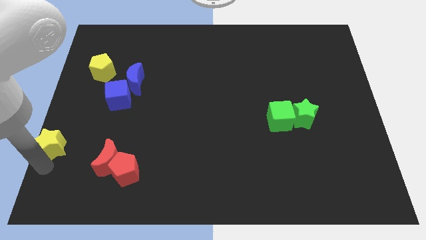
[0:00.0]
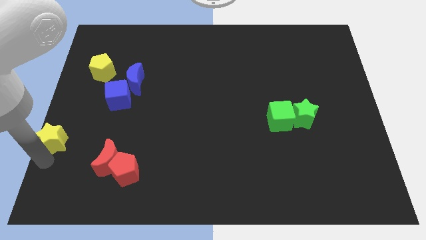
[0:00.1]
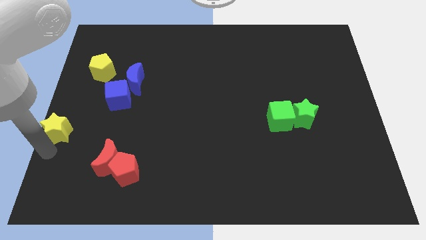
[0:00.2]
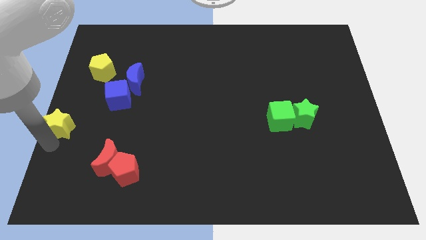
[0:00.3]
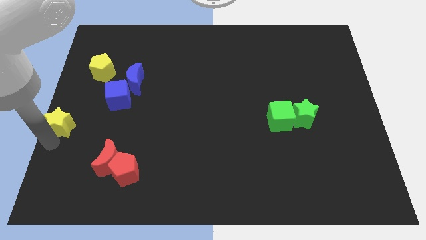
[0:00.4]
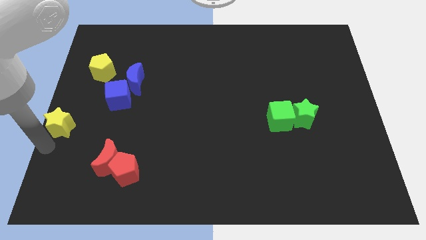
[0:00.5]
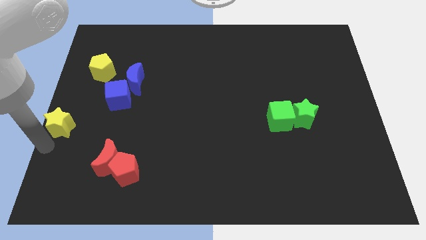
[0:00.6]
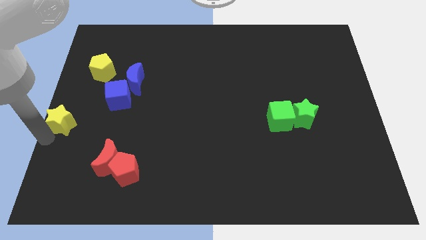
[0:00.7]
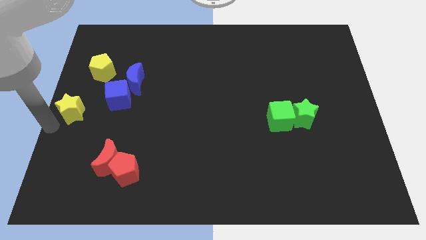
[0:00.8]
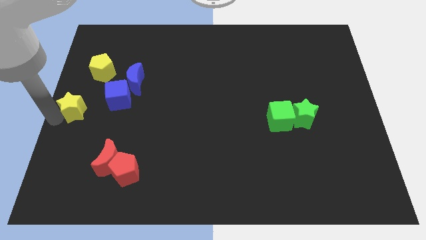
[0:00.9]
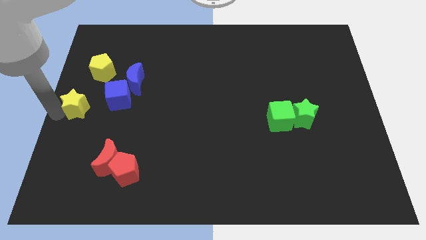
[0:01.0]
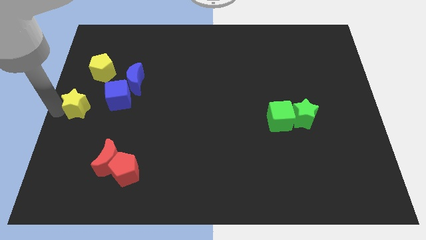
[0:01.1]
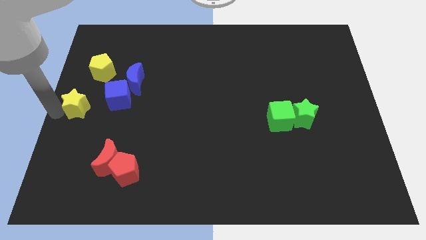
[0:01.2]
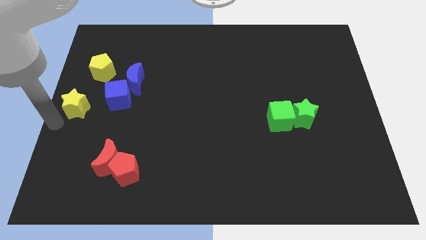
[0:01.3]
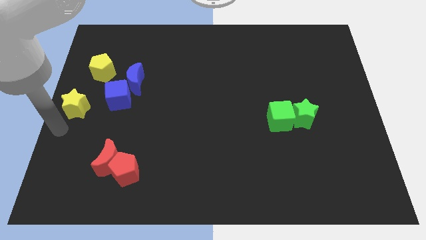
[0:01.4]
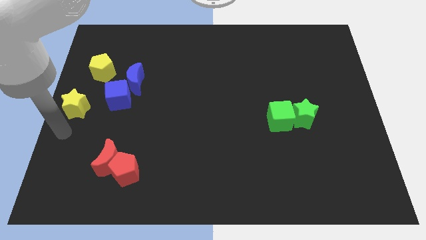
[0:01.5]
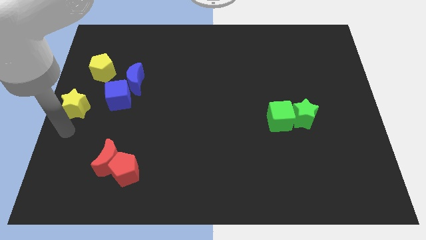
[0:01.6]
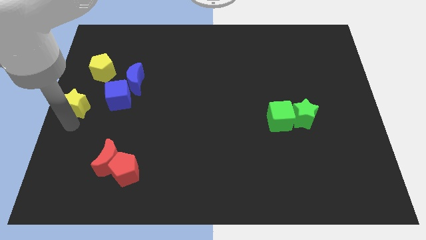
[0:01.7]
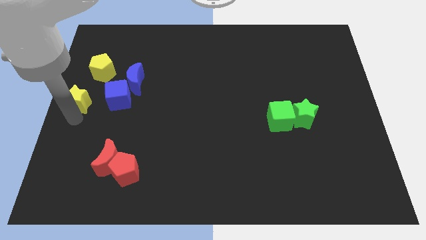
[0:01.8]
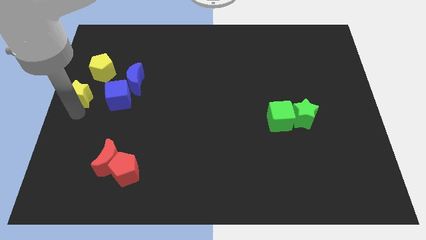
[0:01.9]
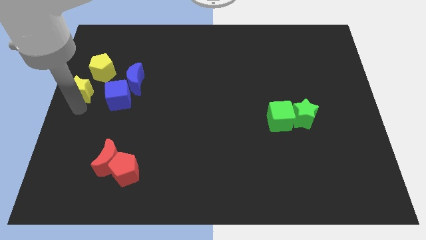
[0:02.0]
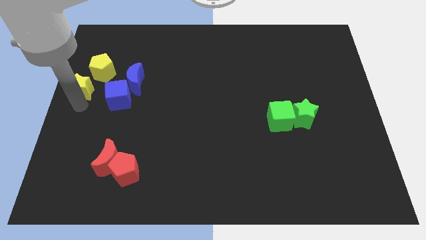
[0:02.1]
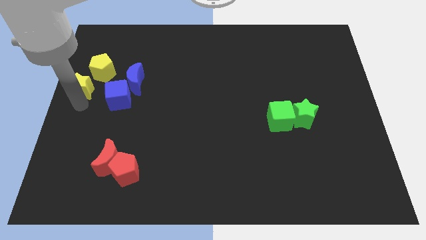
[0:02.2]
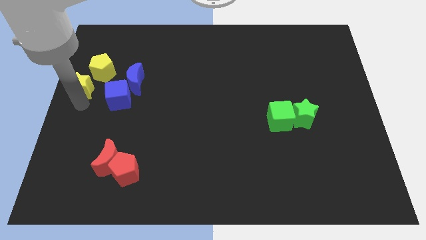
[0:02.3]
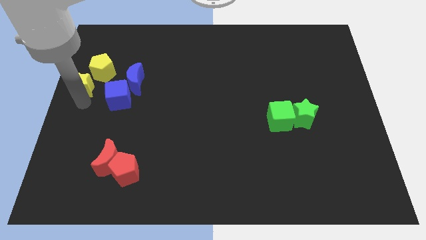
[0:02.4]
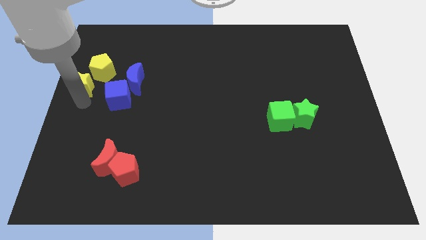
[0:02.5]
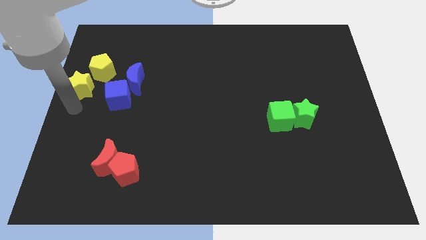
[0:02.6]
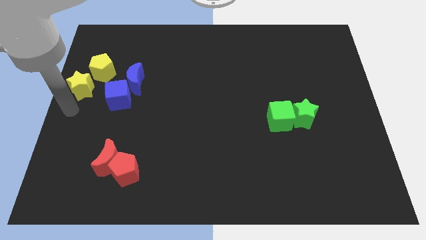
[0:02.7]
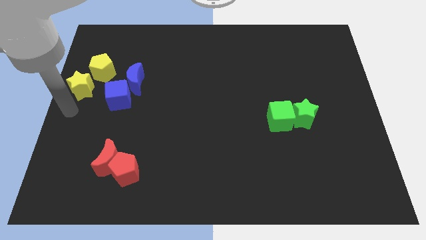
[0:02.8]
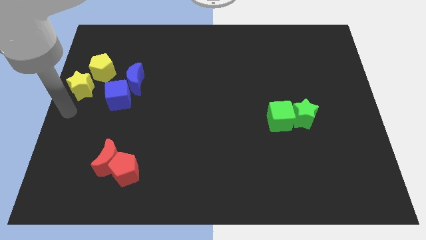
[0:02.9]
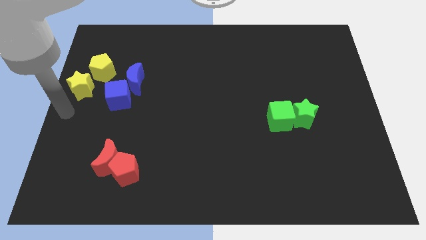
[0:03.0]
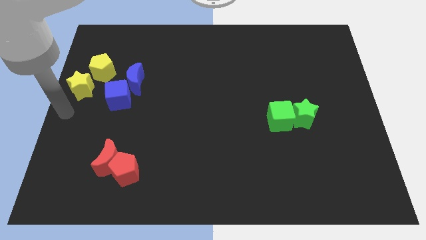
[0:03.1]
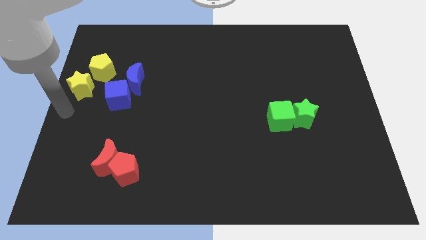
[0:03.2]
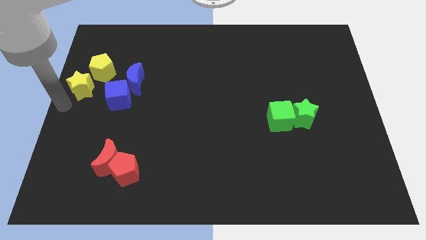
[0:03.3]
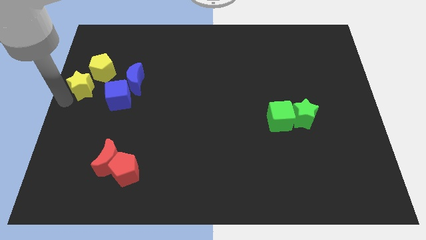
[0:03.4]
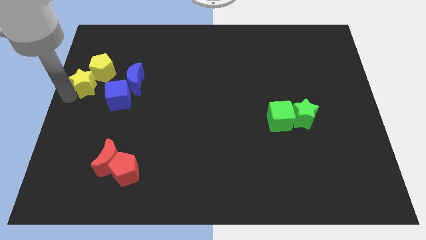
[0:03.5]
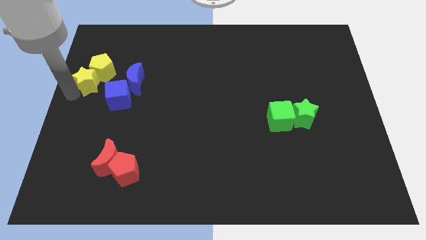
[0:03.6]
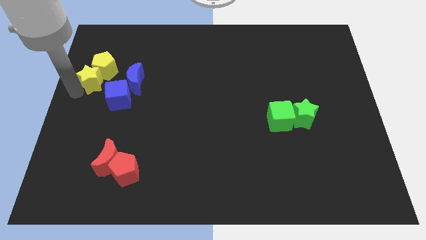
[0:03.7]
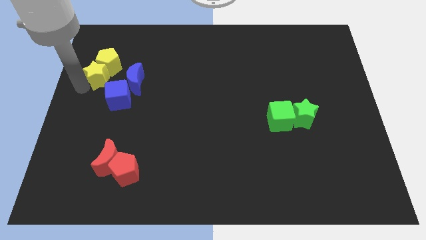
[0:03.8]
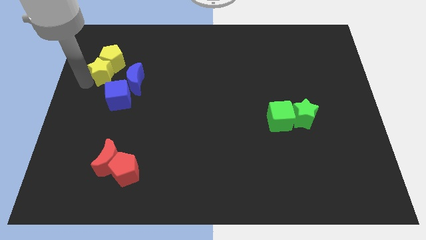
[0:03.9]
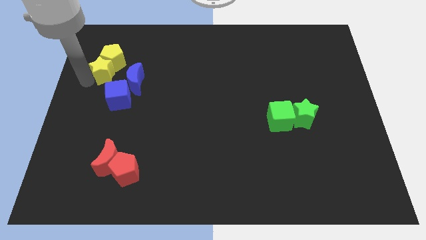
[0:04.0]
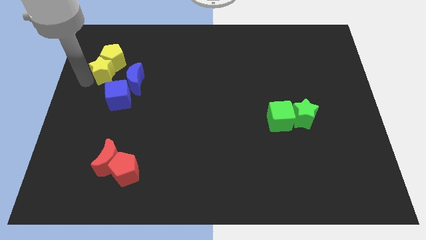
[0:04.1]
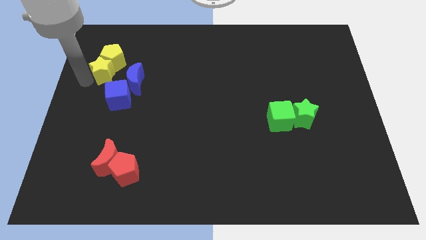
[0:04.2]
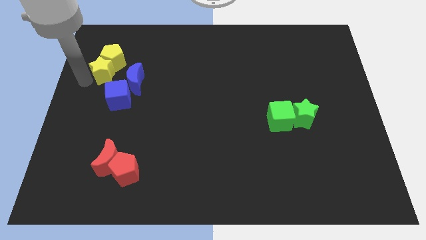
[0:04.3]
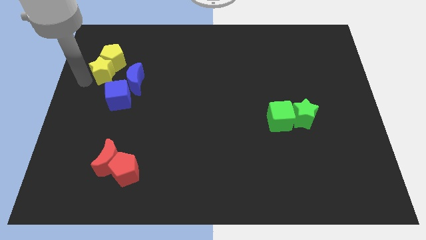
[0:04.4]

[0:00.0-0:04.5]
push the yellow star into the yellow pentagon

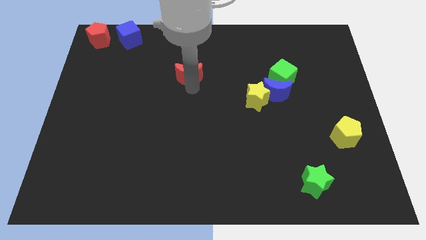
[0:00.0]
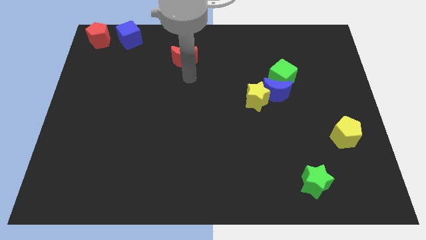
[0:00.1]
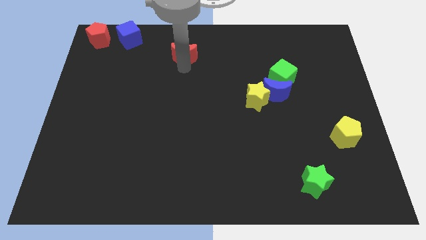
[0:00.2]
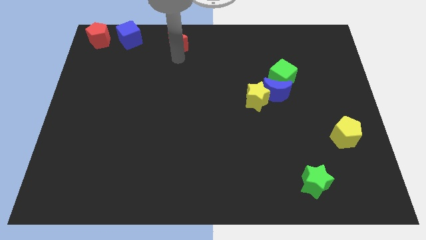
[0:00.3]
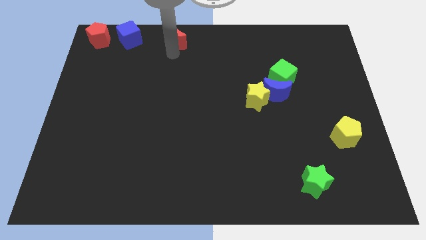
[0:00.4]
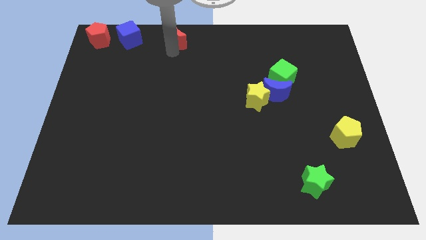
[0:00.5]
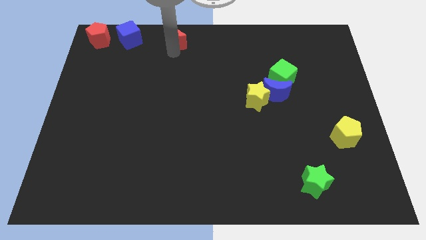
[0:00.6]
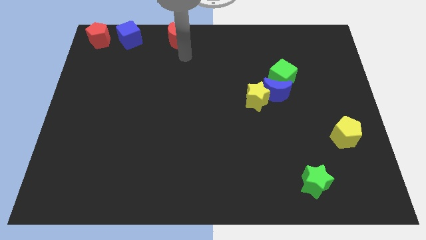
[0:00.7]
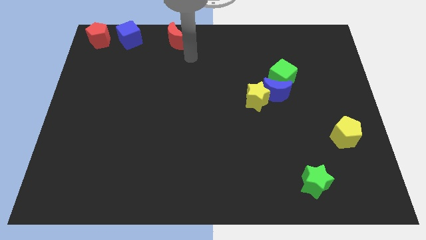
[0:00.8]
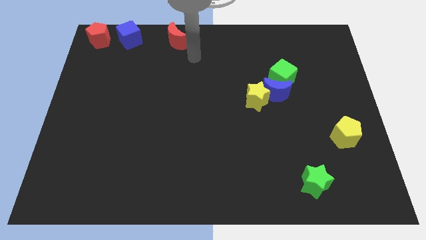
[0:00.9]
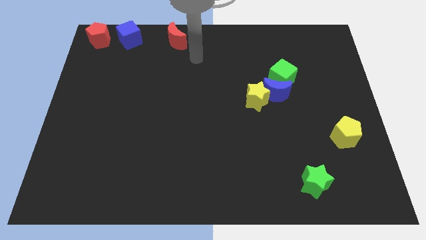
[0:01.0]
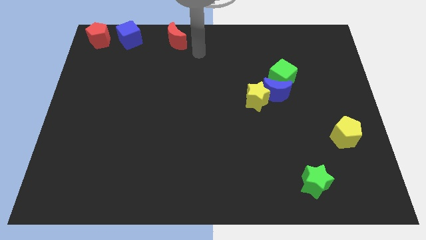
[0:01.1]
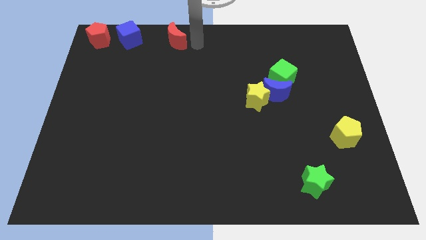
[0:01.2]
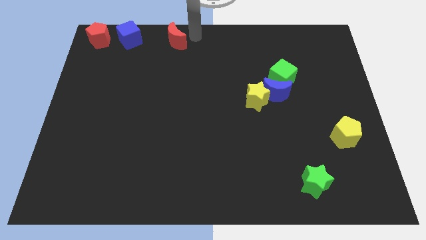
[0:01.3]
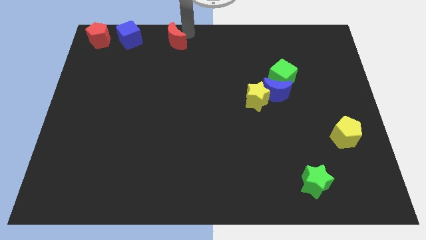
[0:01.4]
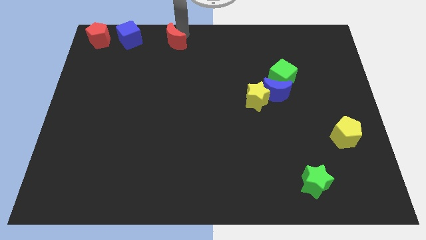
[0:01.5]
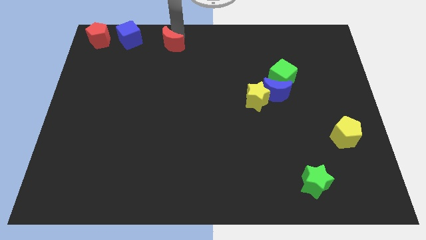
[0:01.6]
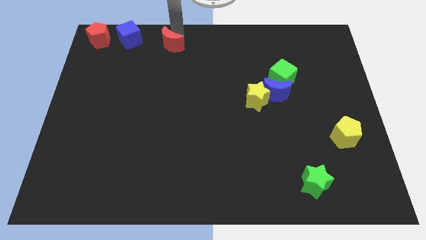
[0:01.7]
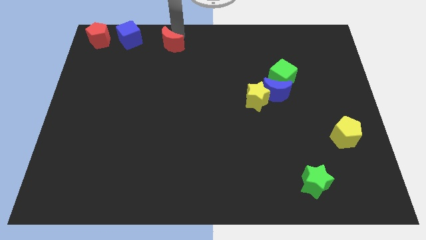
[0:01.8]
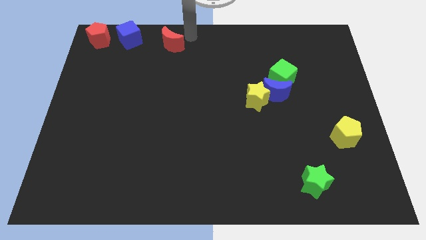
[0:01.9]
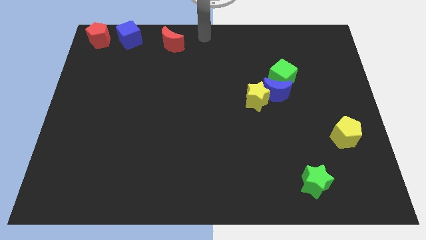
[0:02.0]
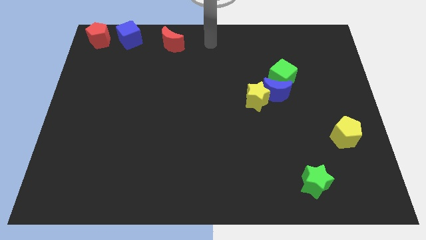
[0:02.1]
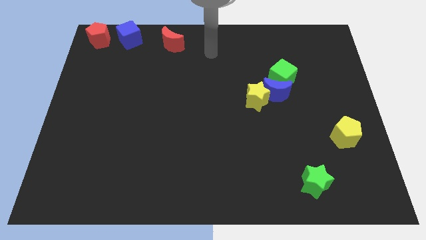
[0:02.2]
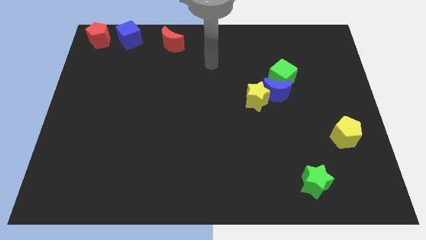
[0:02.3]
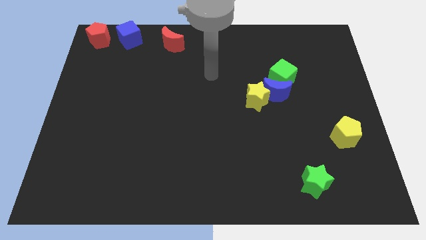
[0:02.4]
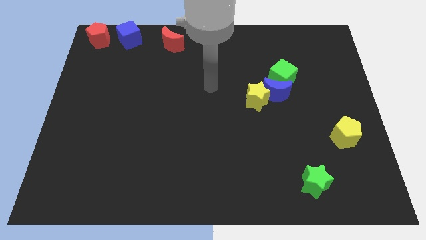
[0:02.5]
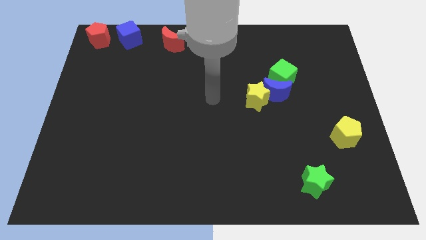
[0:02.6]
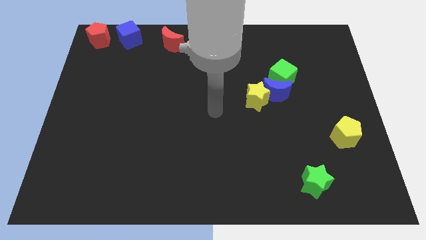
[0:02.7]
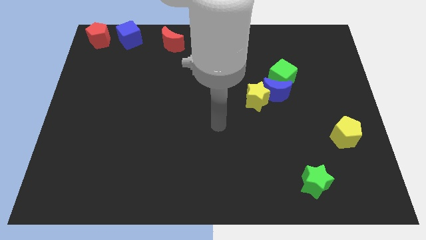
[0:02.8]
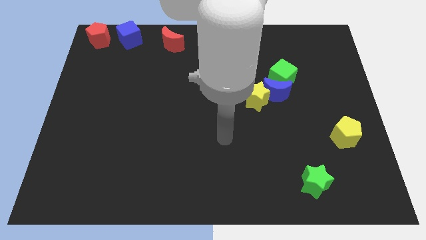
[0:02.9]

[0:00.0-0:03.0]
put red moon parallel right to blue cube

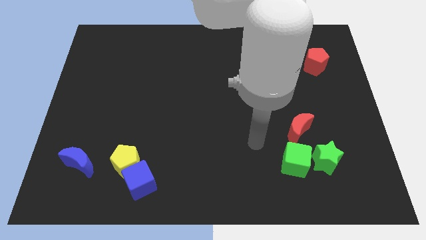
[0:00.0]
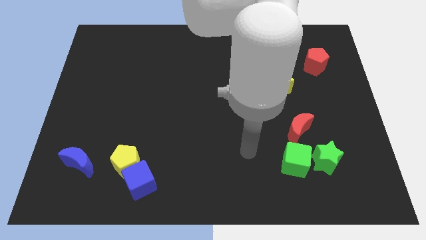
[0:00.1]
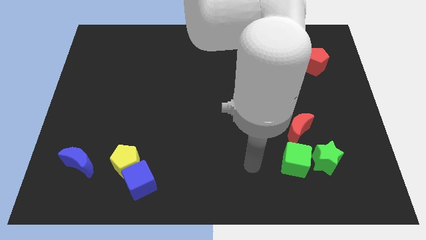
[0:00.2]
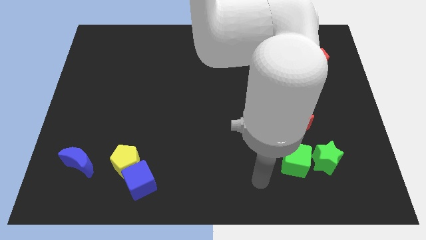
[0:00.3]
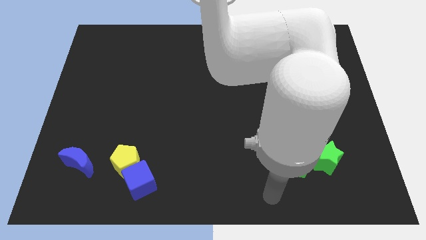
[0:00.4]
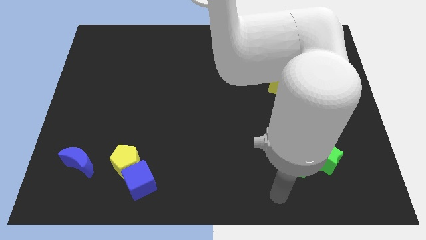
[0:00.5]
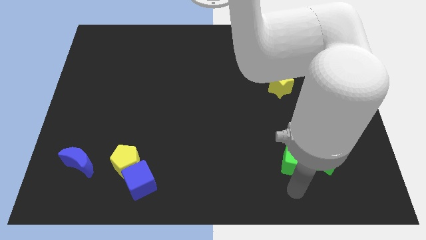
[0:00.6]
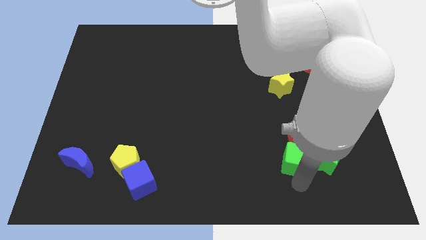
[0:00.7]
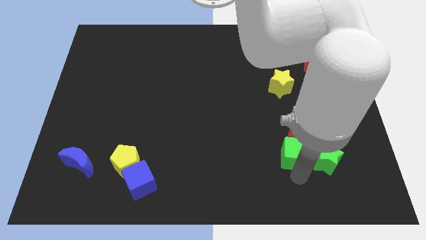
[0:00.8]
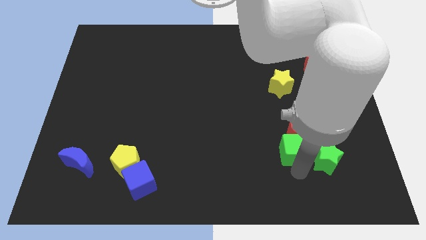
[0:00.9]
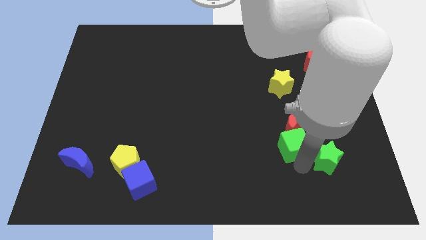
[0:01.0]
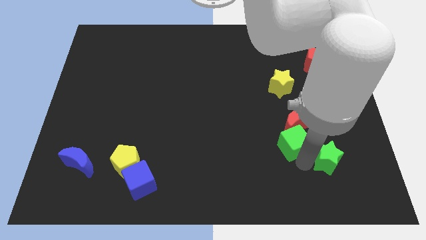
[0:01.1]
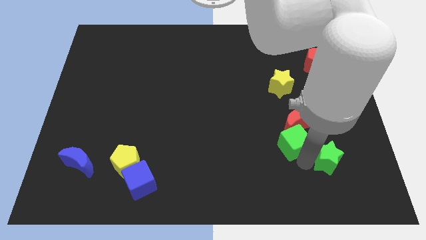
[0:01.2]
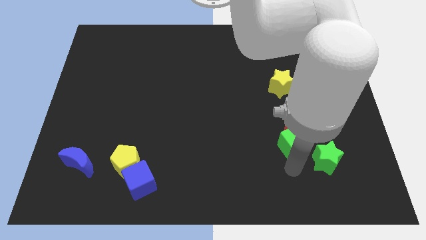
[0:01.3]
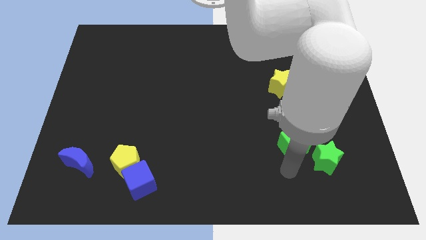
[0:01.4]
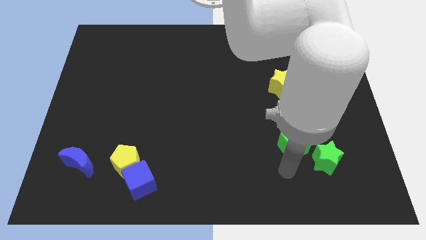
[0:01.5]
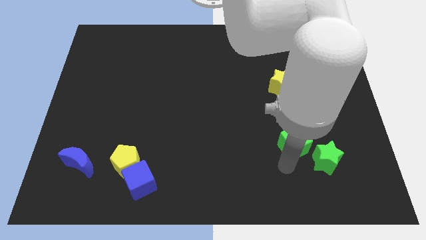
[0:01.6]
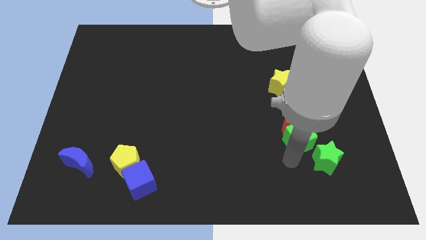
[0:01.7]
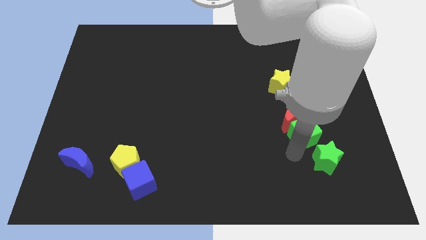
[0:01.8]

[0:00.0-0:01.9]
push the green cube into the red moon
